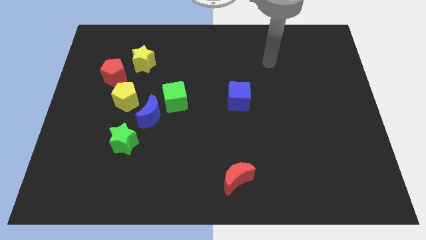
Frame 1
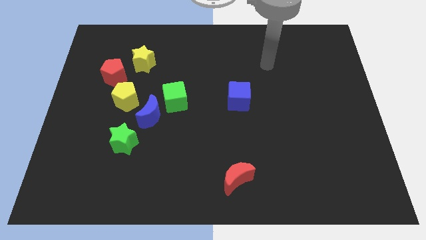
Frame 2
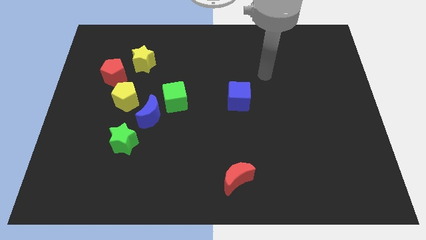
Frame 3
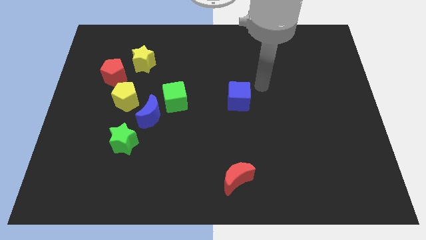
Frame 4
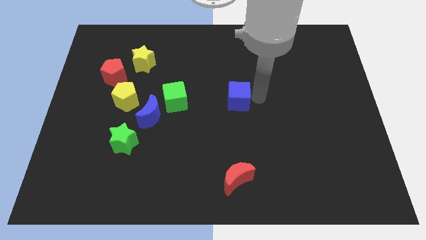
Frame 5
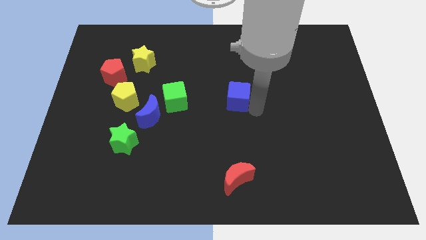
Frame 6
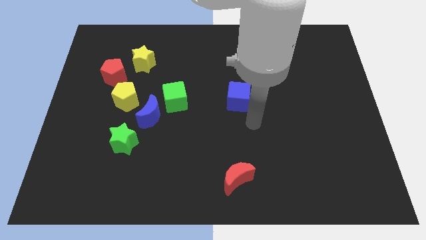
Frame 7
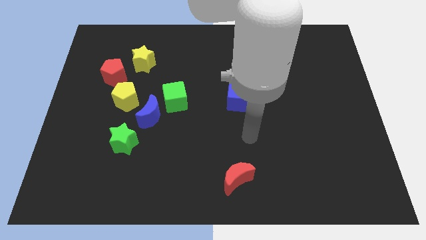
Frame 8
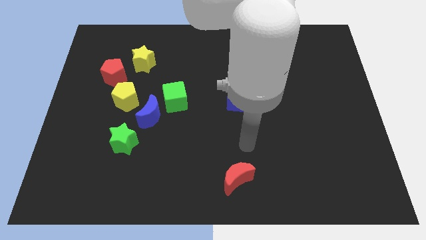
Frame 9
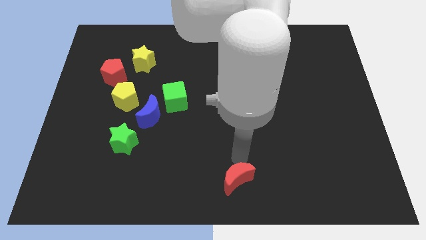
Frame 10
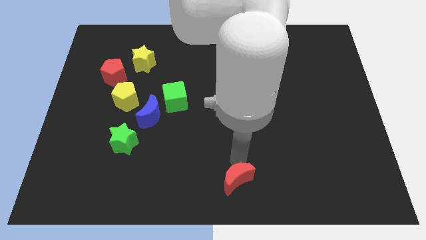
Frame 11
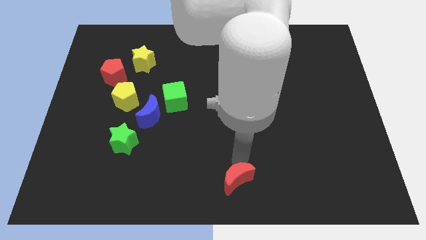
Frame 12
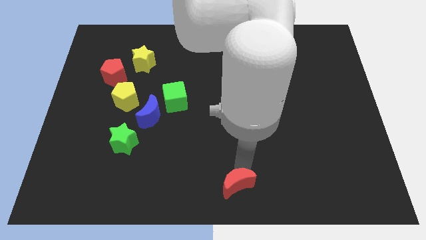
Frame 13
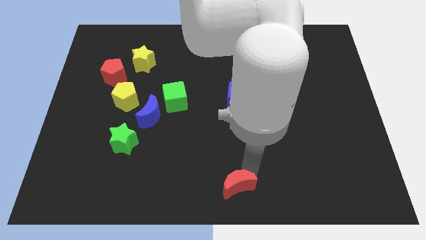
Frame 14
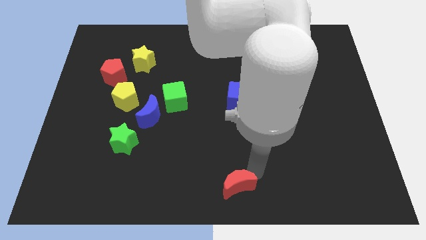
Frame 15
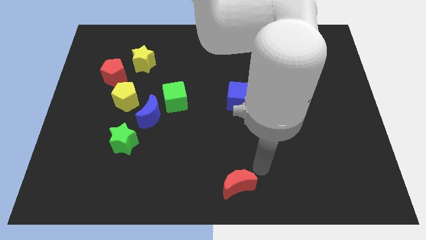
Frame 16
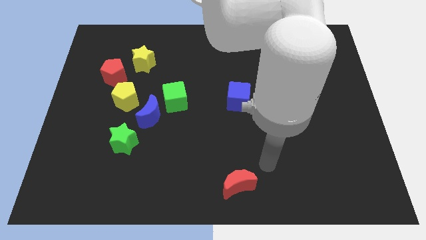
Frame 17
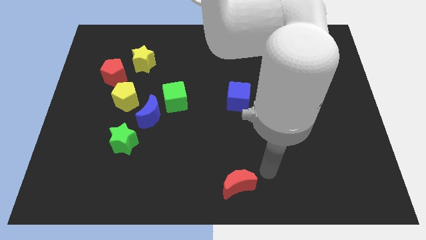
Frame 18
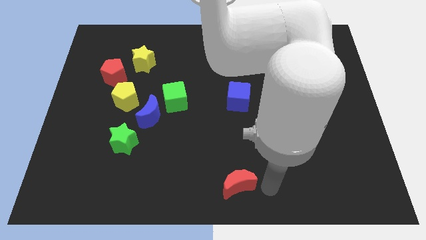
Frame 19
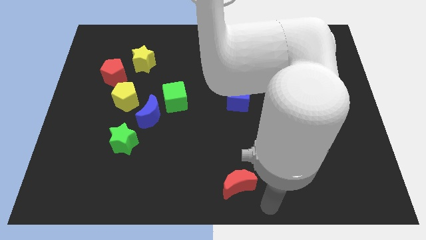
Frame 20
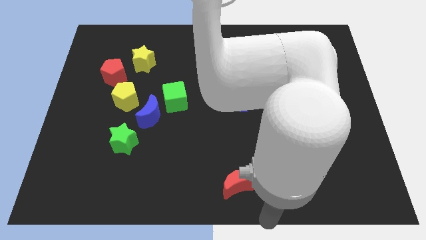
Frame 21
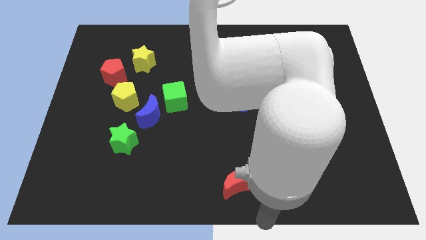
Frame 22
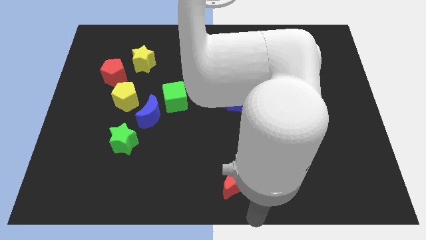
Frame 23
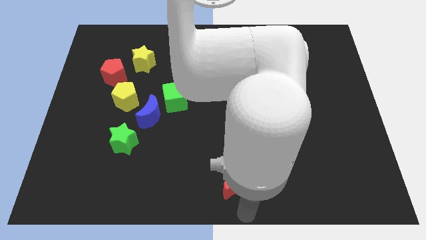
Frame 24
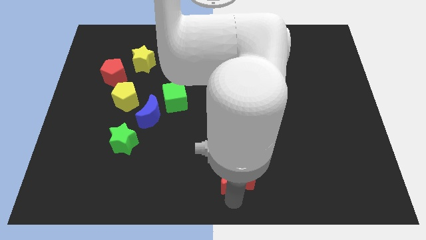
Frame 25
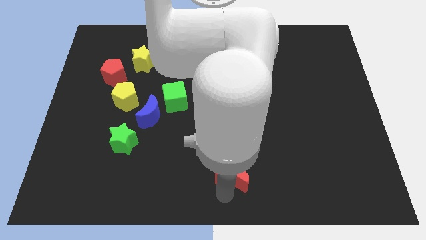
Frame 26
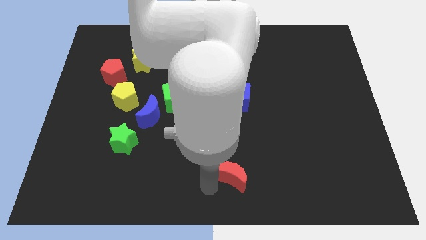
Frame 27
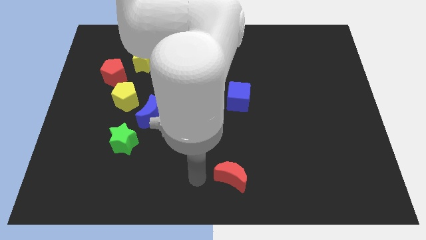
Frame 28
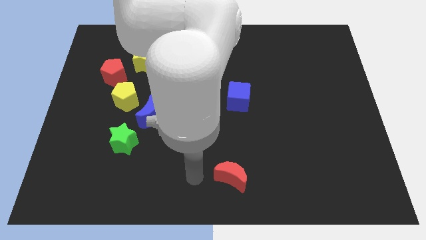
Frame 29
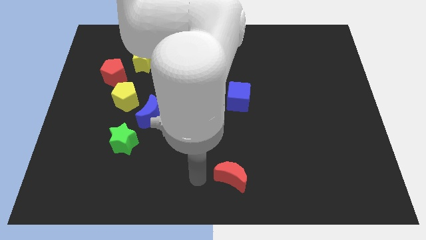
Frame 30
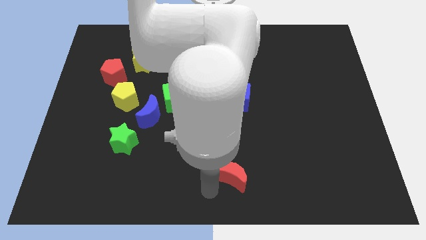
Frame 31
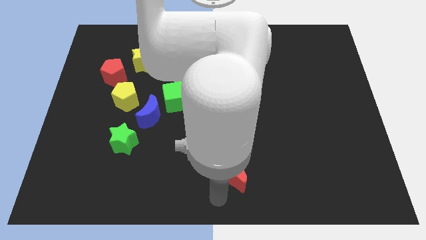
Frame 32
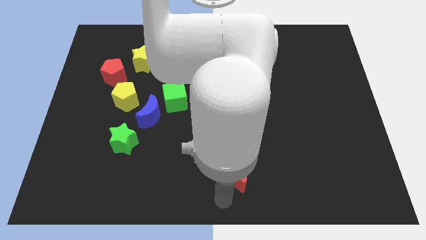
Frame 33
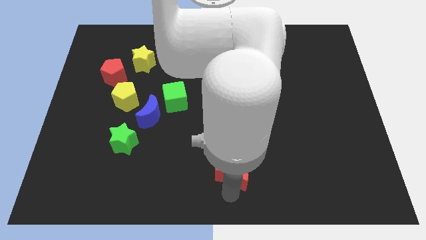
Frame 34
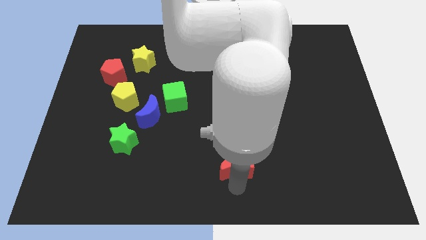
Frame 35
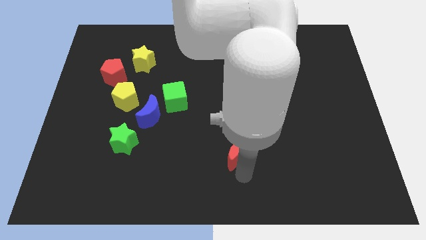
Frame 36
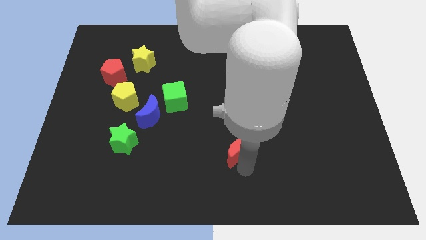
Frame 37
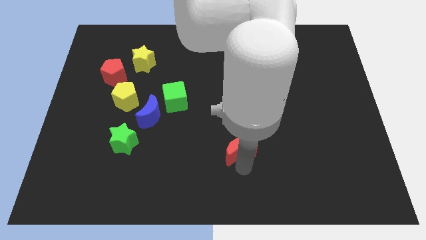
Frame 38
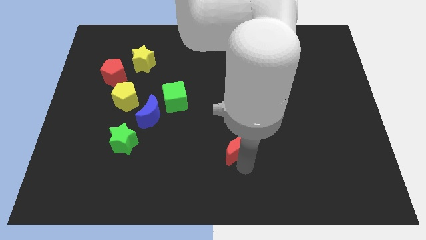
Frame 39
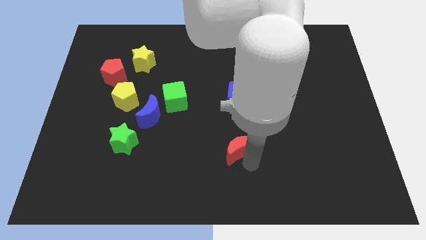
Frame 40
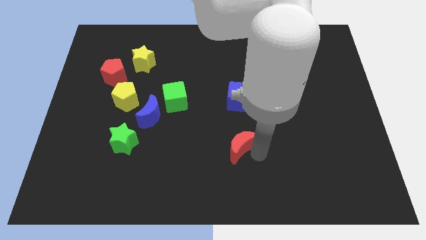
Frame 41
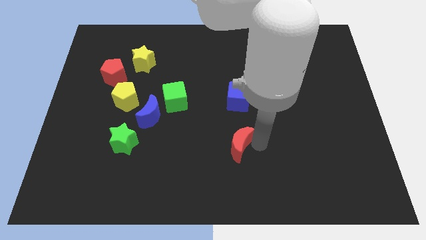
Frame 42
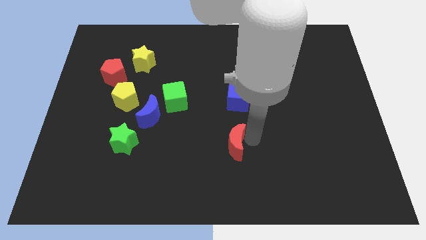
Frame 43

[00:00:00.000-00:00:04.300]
place red crescent below blue cube

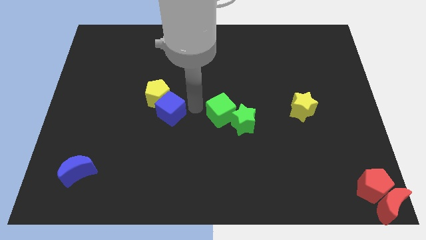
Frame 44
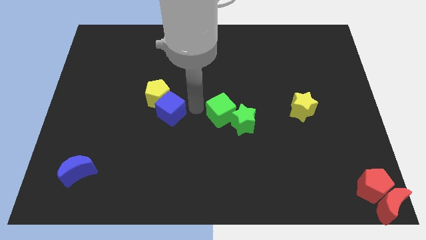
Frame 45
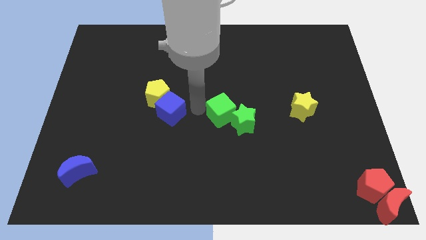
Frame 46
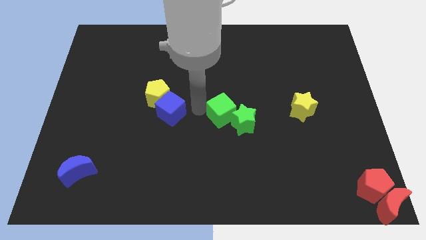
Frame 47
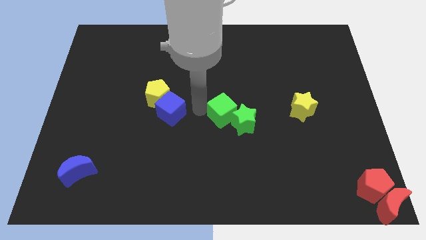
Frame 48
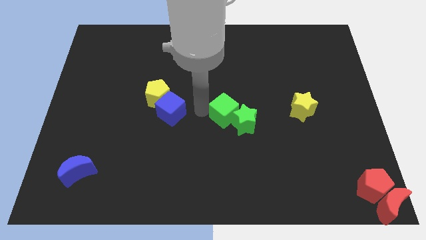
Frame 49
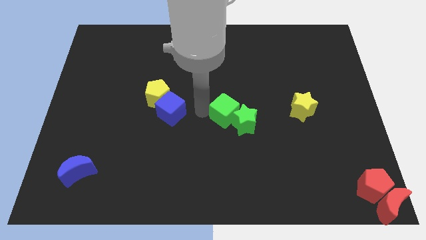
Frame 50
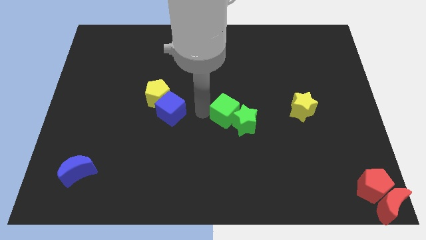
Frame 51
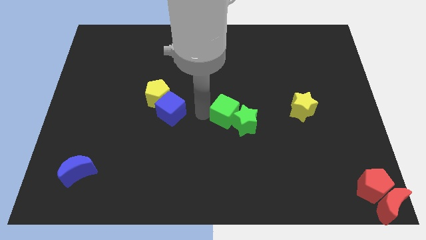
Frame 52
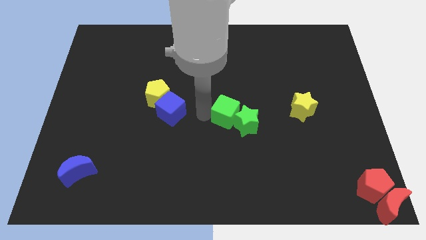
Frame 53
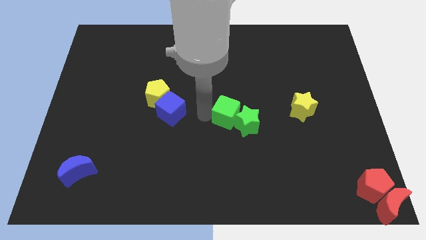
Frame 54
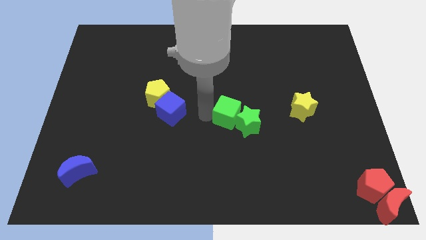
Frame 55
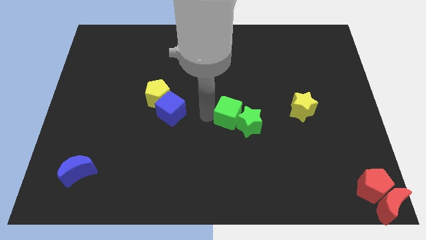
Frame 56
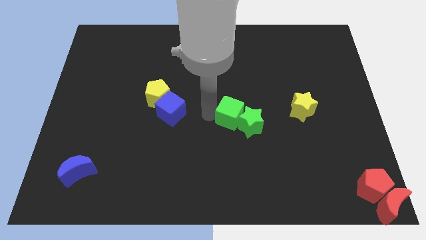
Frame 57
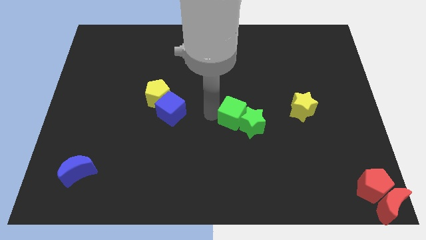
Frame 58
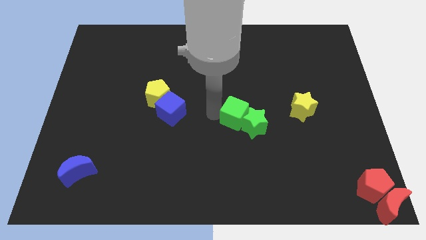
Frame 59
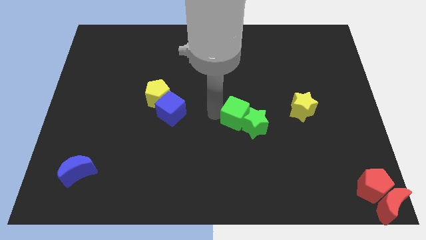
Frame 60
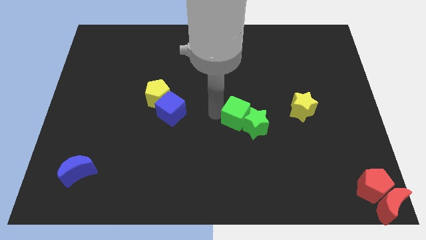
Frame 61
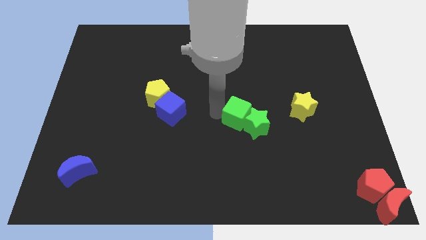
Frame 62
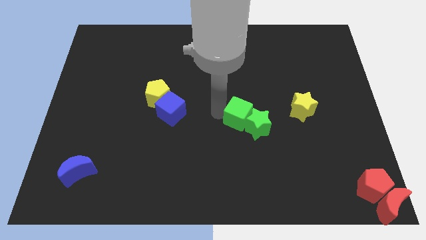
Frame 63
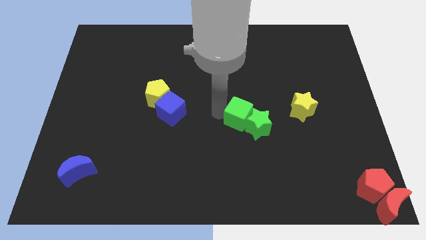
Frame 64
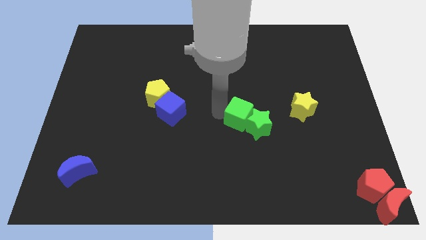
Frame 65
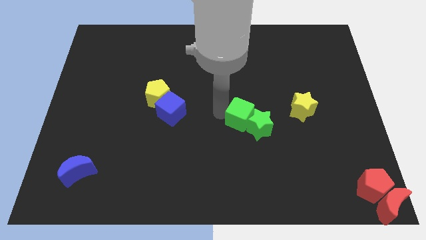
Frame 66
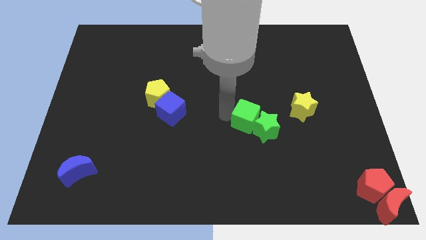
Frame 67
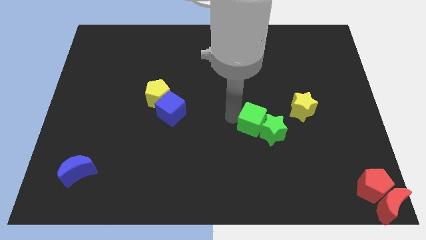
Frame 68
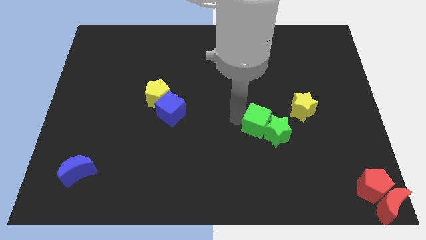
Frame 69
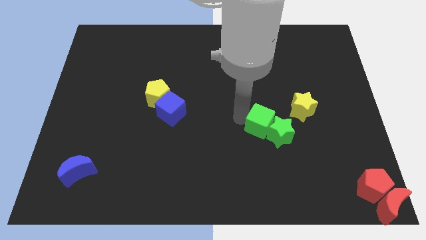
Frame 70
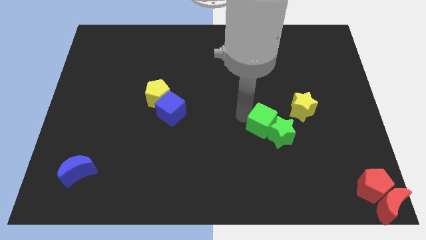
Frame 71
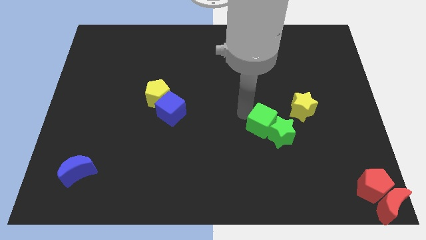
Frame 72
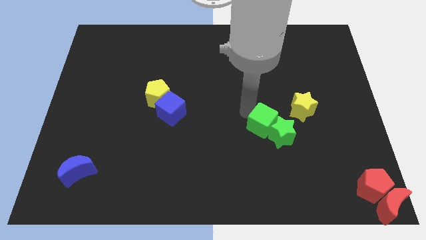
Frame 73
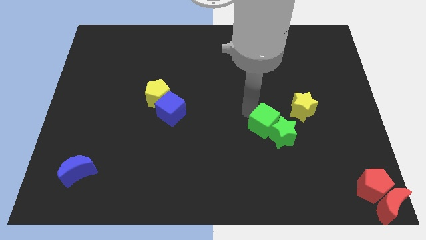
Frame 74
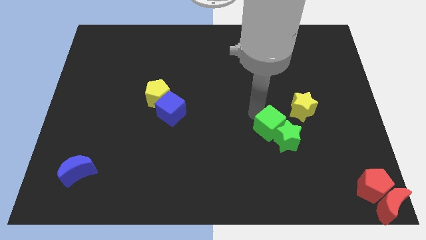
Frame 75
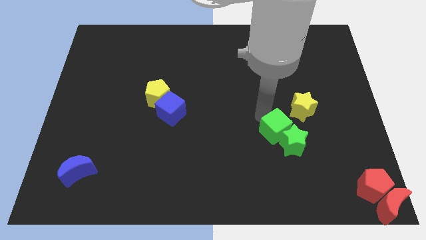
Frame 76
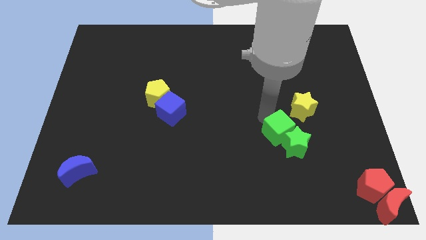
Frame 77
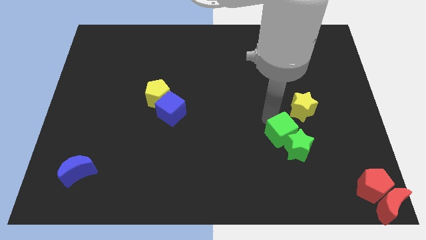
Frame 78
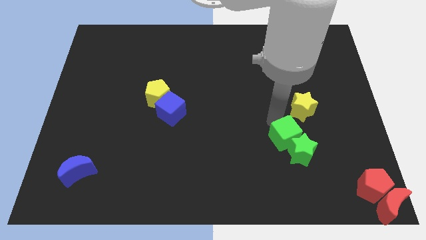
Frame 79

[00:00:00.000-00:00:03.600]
slide the green blocks towards the red blocks

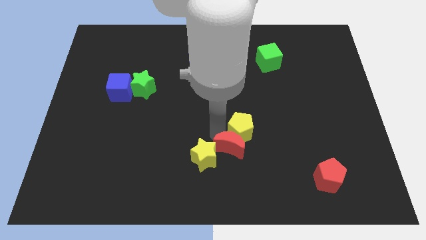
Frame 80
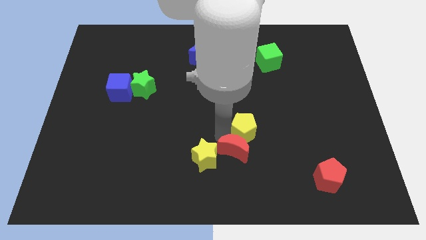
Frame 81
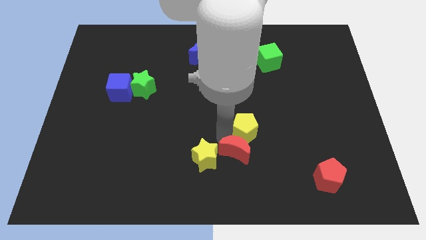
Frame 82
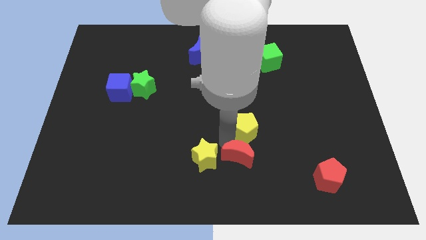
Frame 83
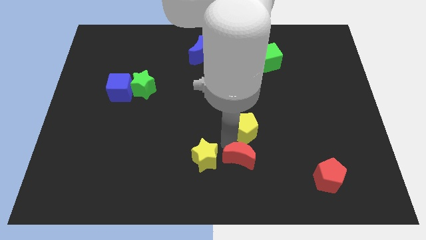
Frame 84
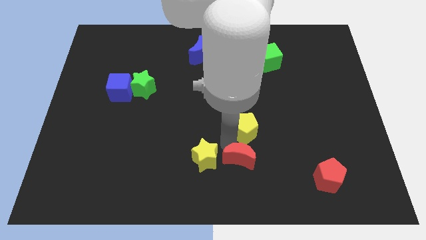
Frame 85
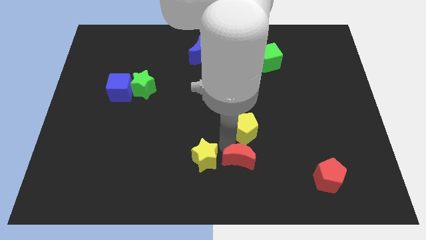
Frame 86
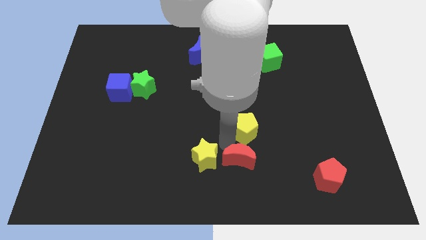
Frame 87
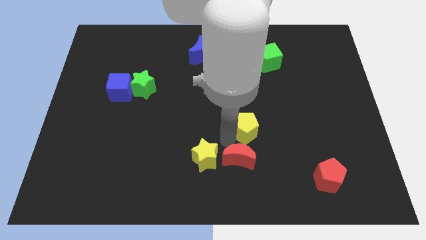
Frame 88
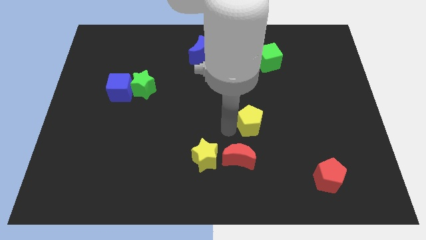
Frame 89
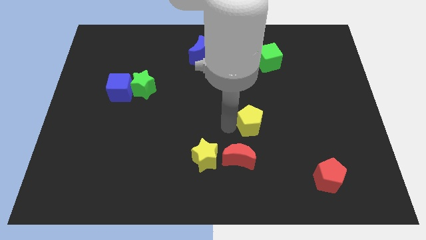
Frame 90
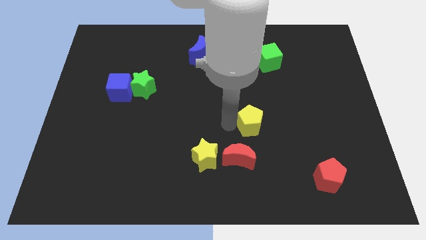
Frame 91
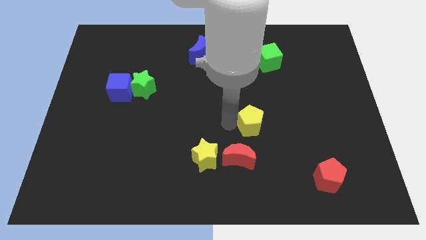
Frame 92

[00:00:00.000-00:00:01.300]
separate the red crescent from the yellow pentagon
